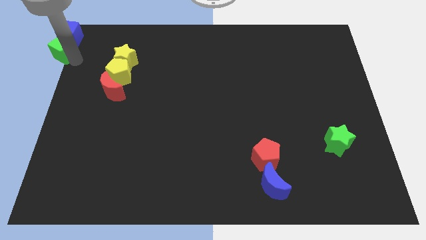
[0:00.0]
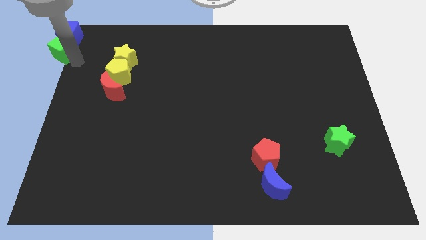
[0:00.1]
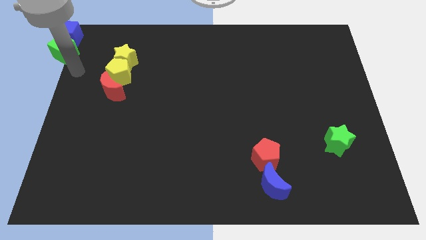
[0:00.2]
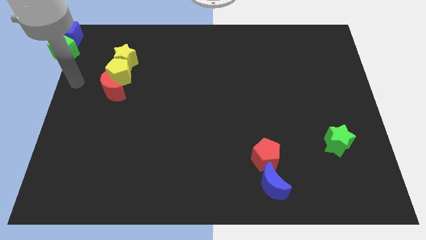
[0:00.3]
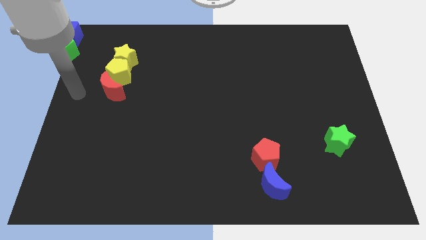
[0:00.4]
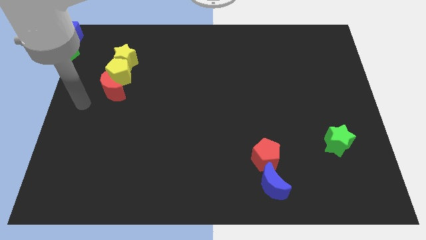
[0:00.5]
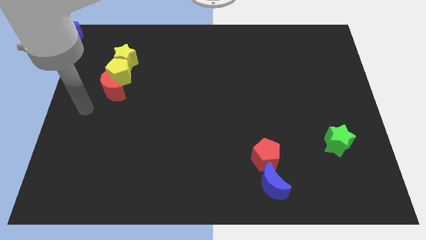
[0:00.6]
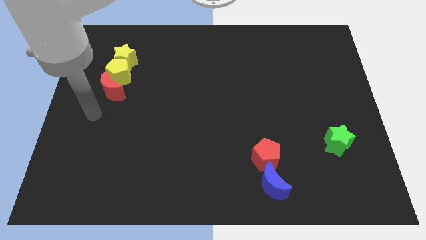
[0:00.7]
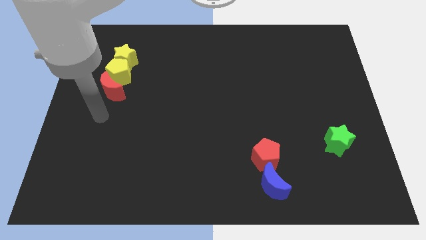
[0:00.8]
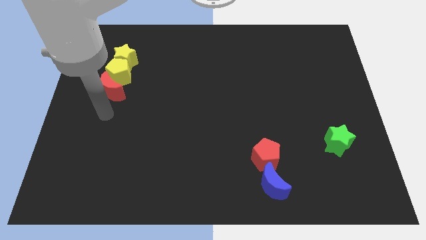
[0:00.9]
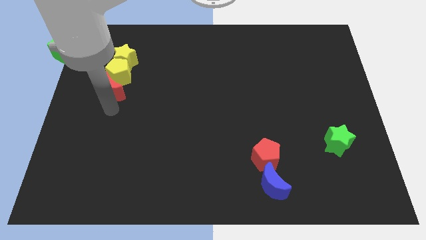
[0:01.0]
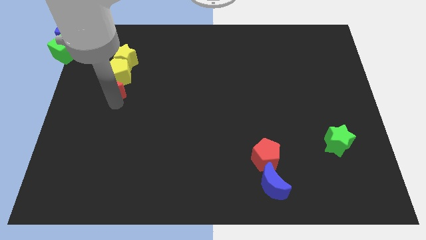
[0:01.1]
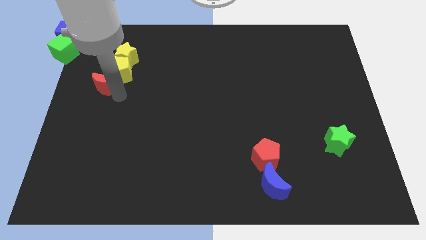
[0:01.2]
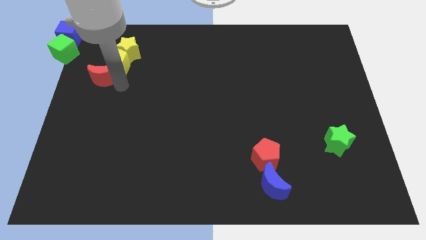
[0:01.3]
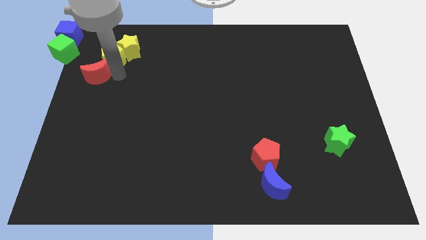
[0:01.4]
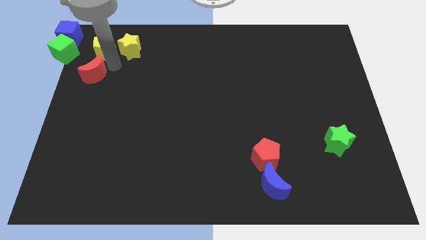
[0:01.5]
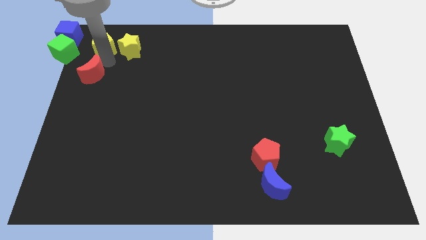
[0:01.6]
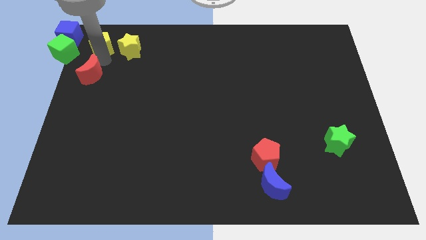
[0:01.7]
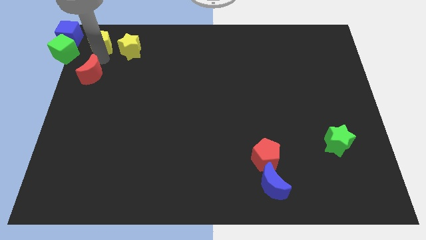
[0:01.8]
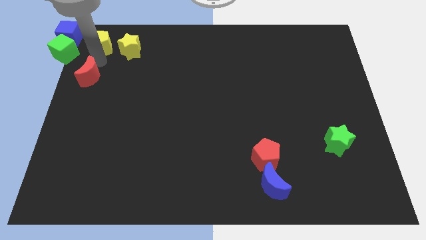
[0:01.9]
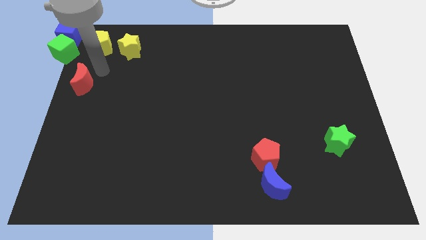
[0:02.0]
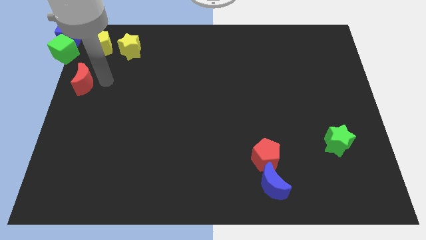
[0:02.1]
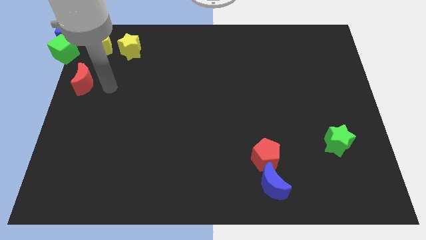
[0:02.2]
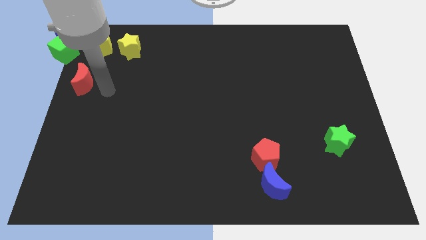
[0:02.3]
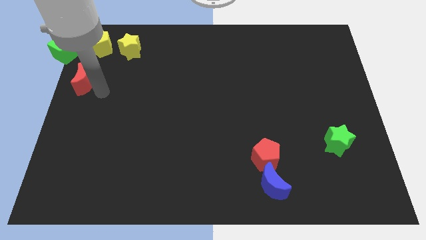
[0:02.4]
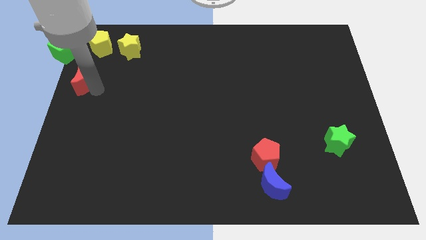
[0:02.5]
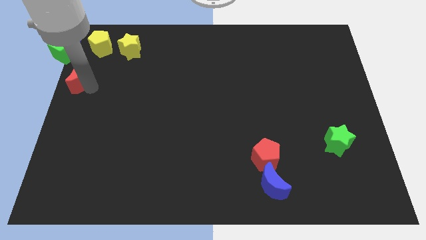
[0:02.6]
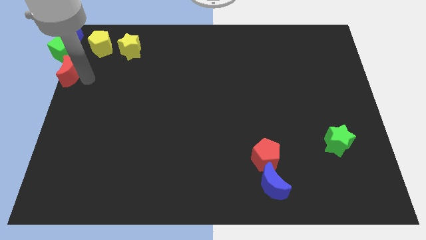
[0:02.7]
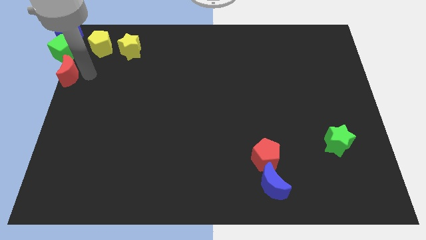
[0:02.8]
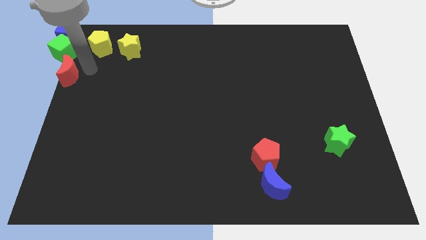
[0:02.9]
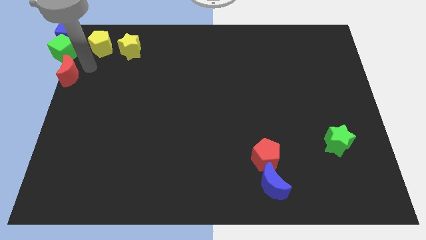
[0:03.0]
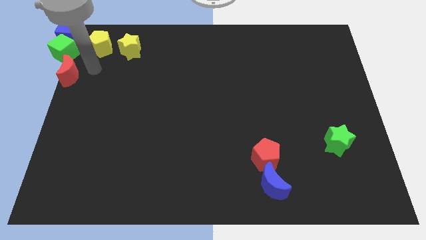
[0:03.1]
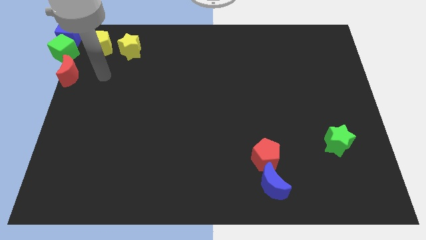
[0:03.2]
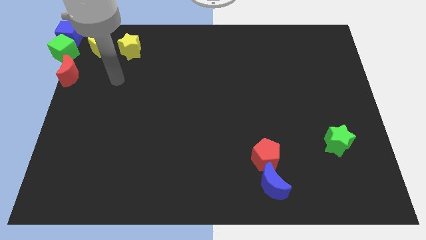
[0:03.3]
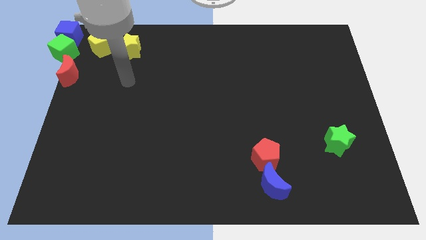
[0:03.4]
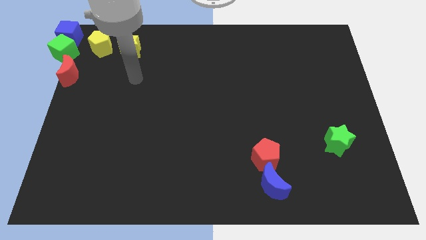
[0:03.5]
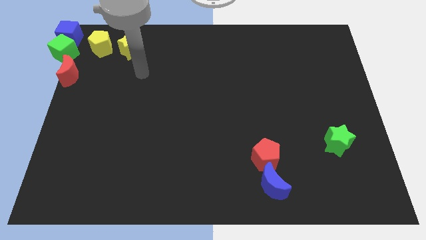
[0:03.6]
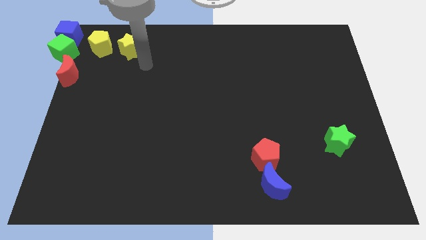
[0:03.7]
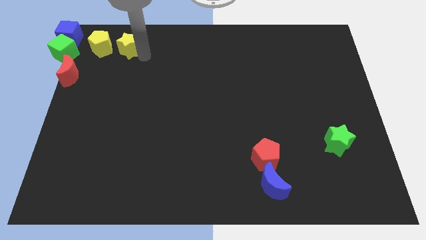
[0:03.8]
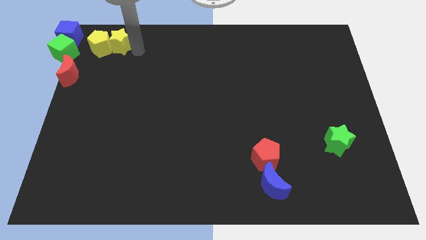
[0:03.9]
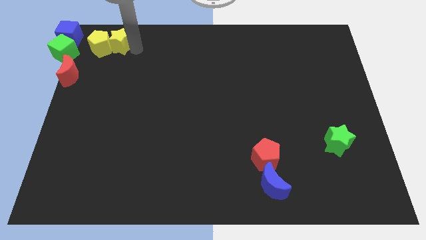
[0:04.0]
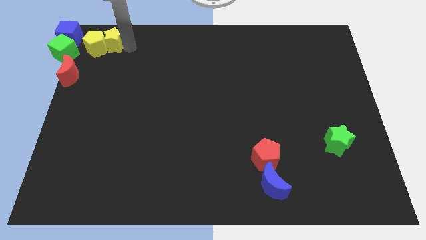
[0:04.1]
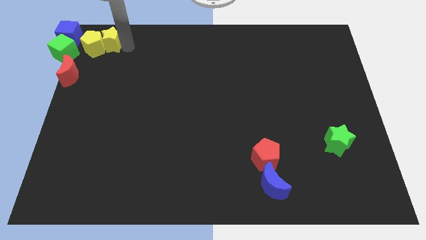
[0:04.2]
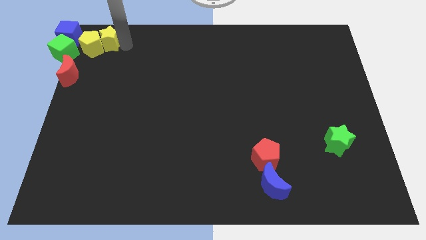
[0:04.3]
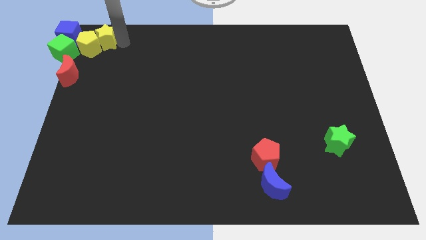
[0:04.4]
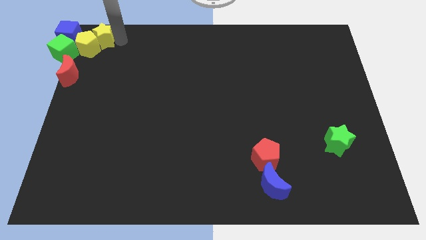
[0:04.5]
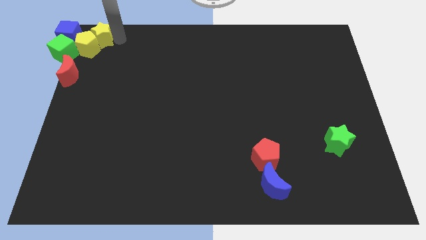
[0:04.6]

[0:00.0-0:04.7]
push the yellow blocks and red moon towards the cubes

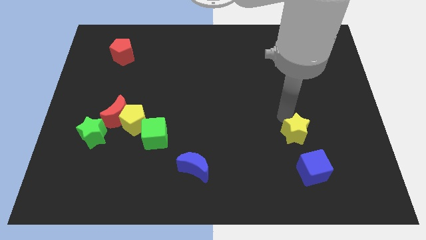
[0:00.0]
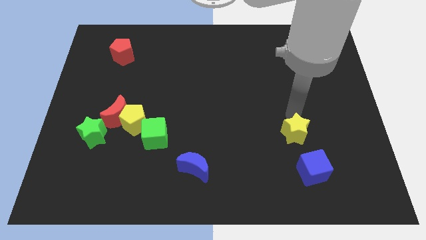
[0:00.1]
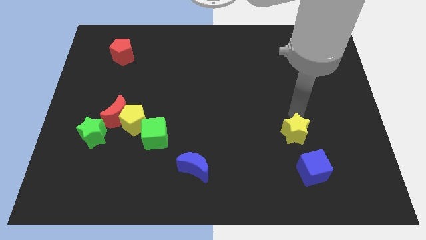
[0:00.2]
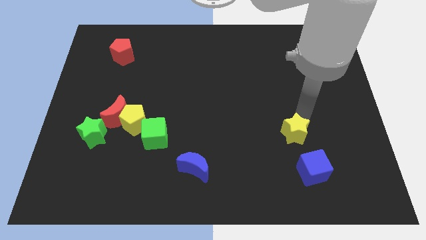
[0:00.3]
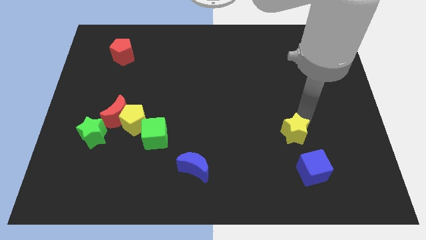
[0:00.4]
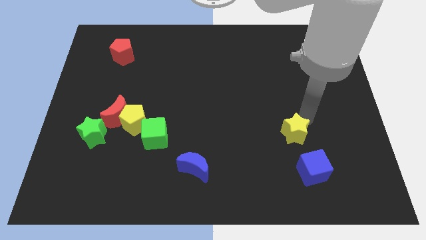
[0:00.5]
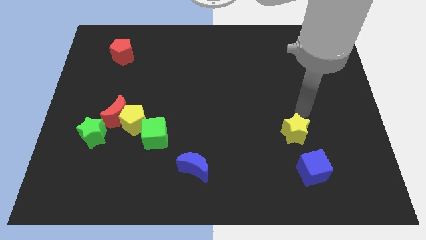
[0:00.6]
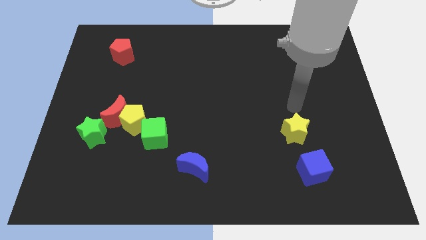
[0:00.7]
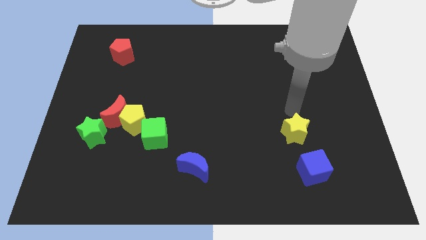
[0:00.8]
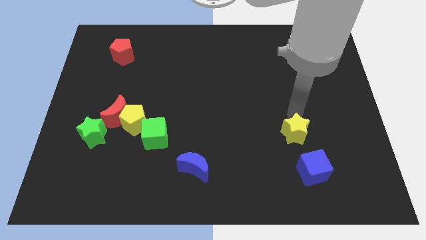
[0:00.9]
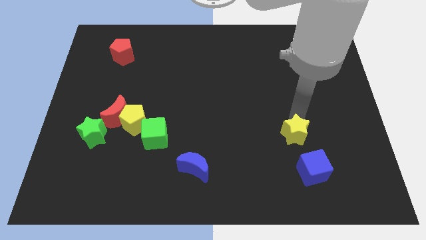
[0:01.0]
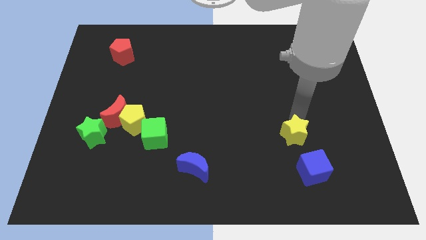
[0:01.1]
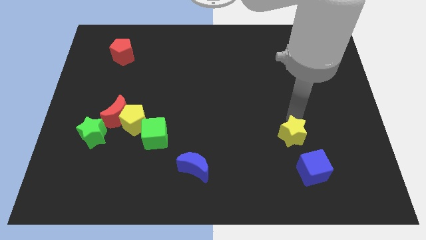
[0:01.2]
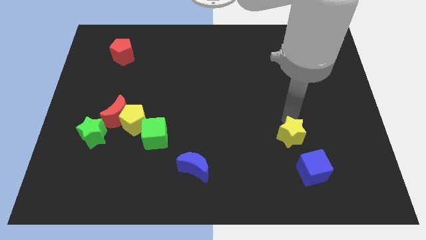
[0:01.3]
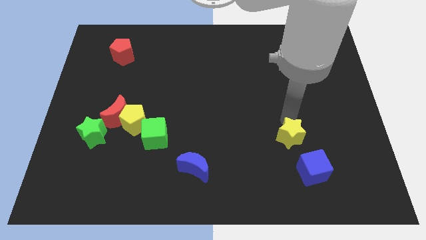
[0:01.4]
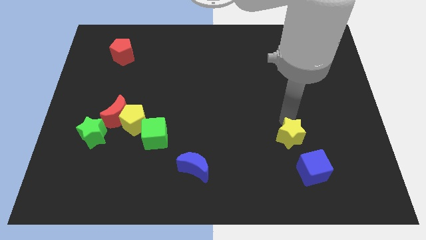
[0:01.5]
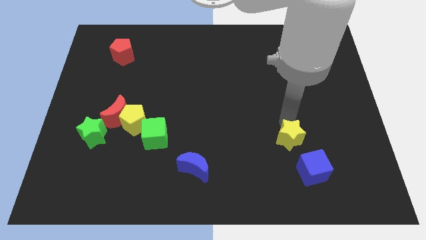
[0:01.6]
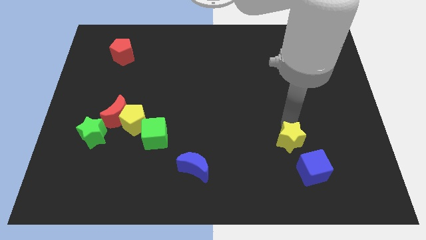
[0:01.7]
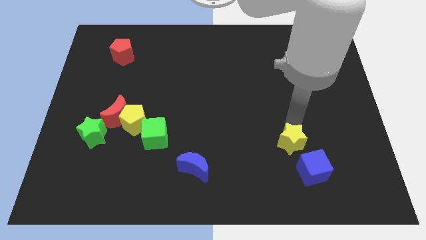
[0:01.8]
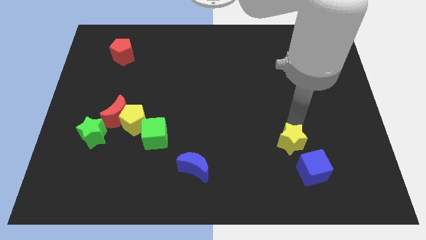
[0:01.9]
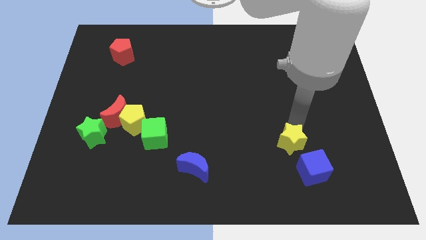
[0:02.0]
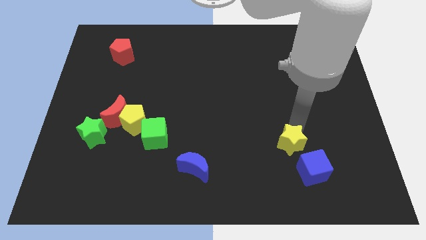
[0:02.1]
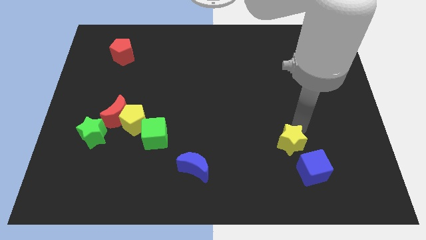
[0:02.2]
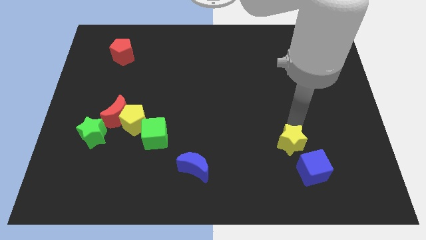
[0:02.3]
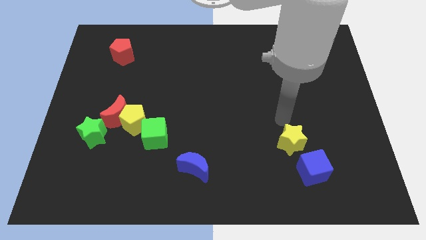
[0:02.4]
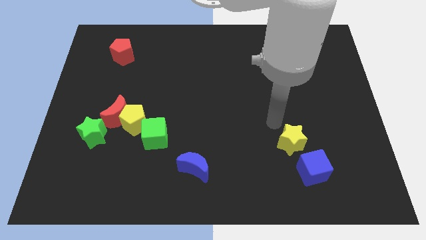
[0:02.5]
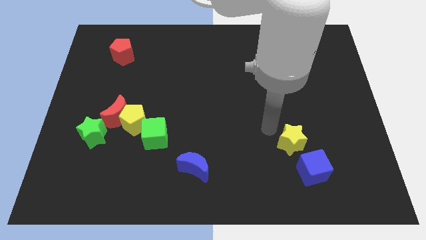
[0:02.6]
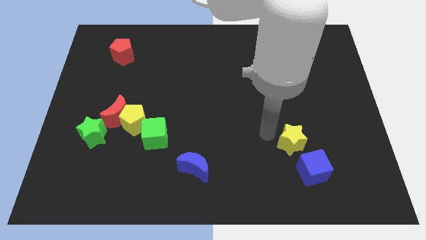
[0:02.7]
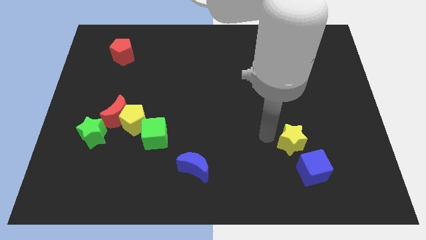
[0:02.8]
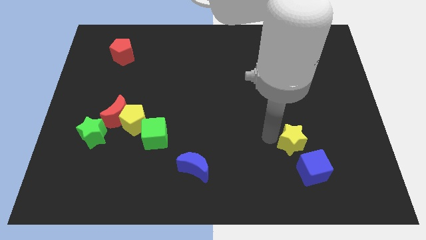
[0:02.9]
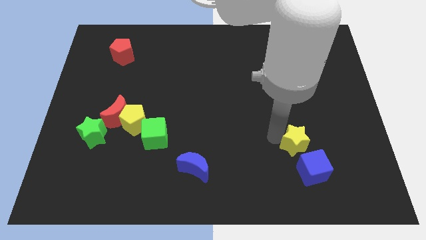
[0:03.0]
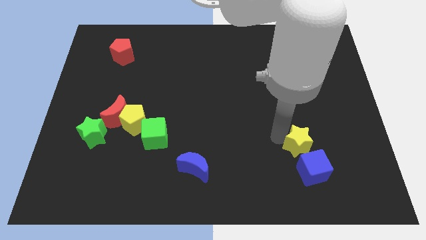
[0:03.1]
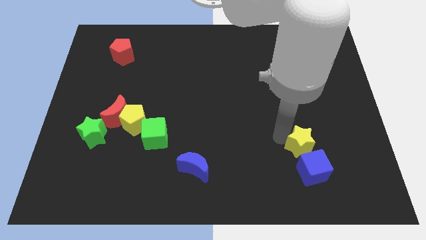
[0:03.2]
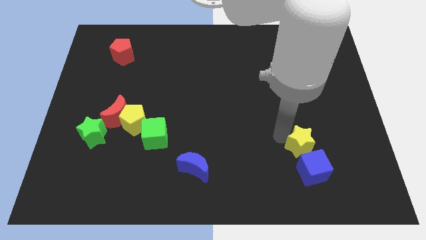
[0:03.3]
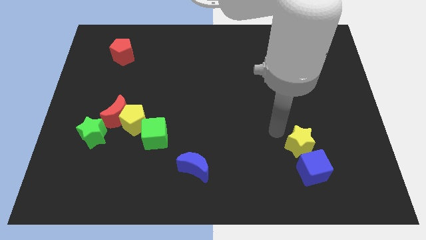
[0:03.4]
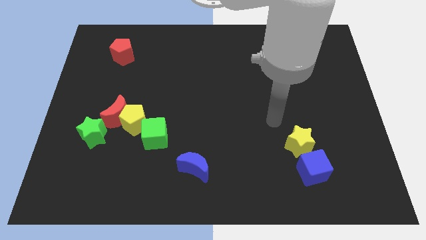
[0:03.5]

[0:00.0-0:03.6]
push the yellow star into the blue cube on top

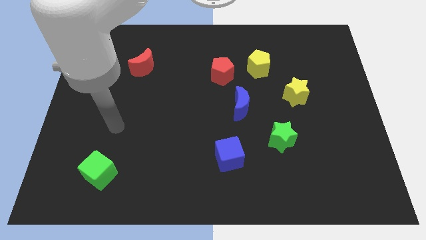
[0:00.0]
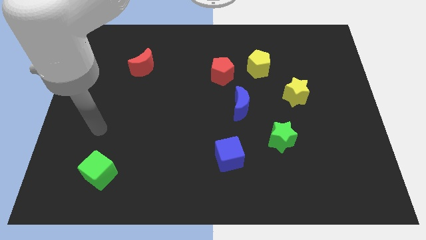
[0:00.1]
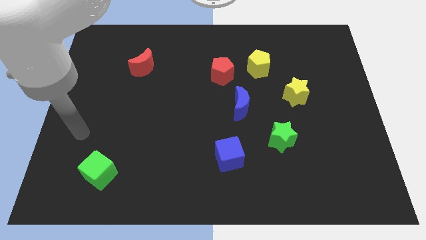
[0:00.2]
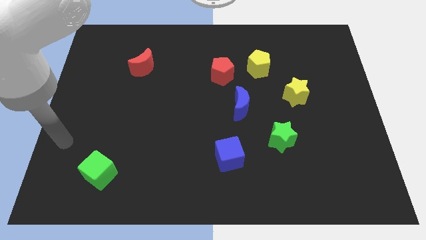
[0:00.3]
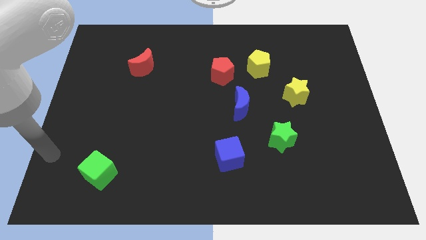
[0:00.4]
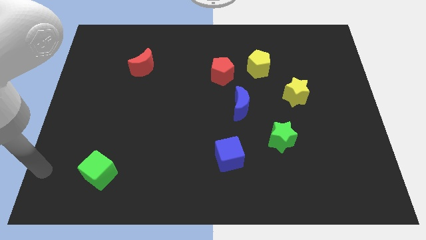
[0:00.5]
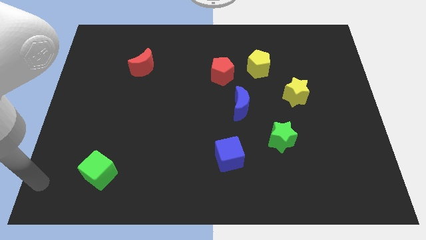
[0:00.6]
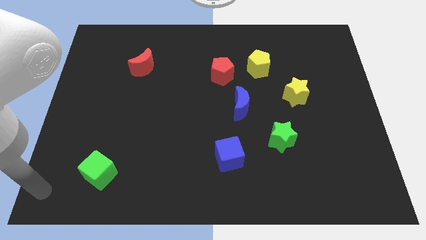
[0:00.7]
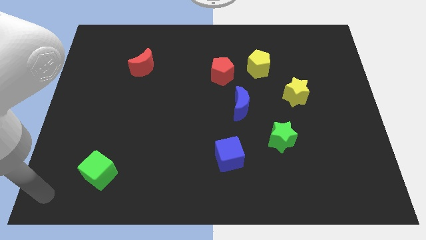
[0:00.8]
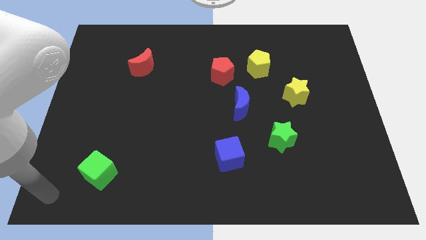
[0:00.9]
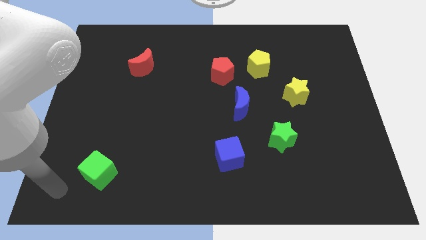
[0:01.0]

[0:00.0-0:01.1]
move the arm to bottom left of the board
